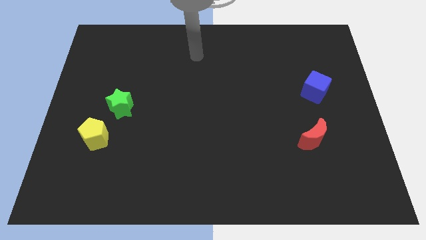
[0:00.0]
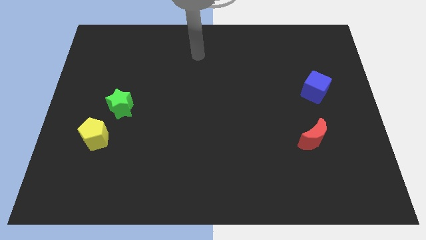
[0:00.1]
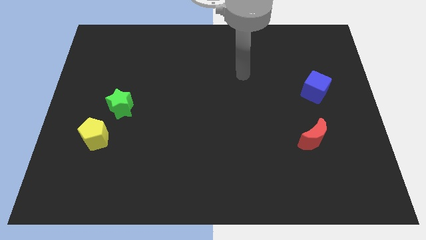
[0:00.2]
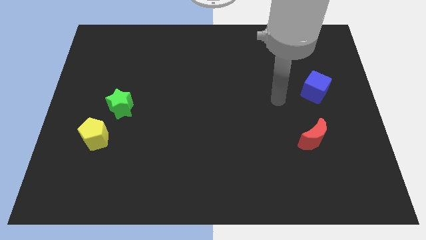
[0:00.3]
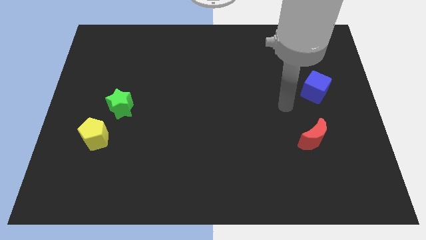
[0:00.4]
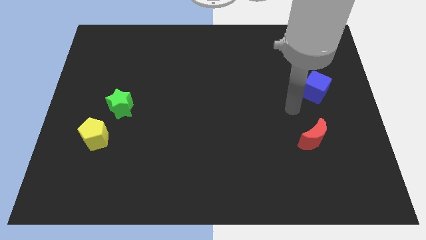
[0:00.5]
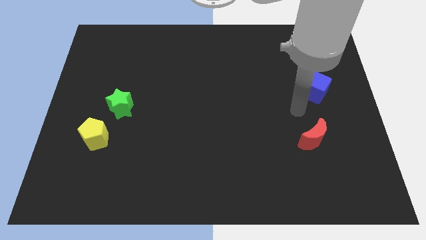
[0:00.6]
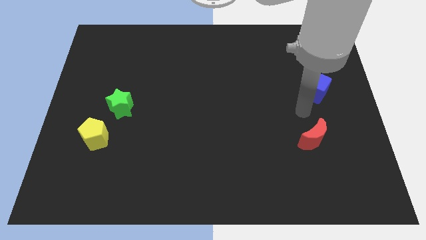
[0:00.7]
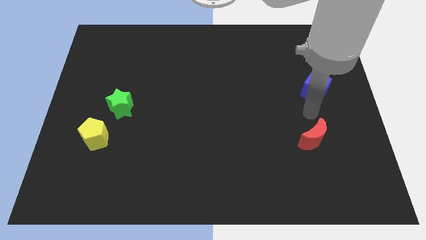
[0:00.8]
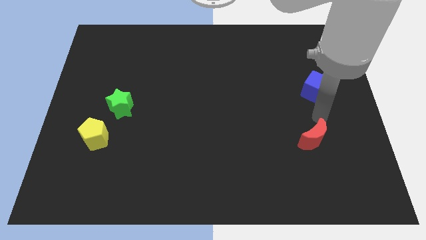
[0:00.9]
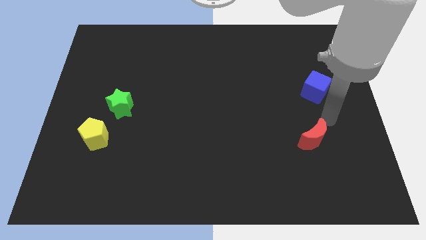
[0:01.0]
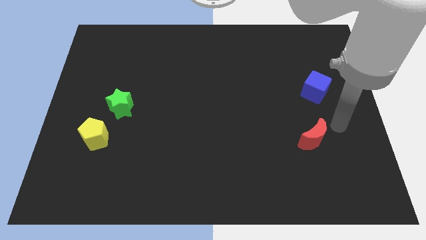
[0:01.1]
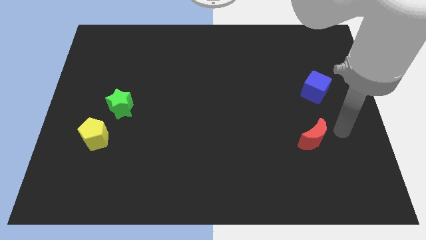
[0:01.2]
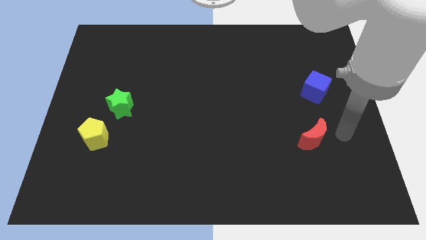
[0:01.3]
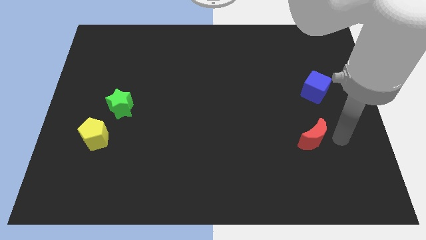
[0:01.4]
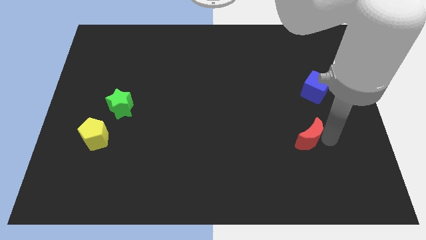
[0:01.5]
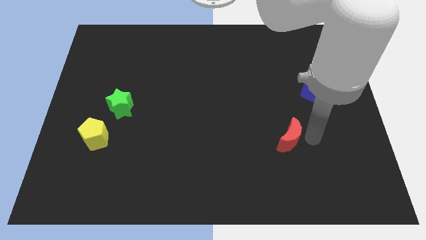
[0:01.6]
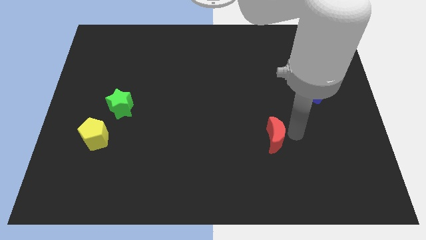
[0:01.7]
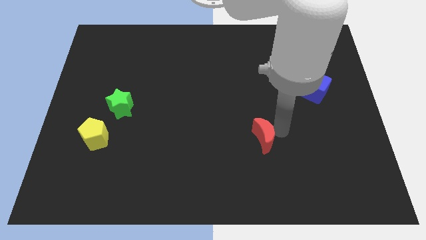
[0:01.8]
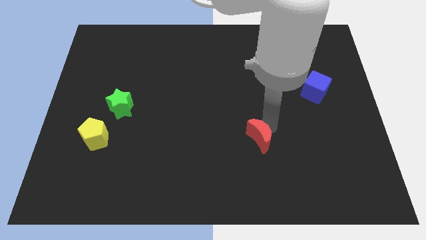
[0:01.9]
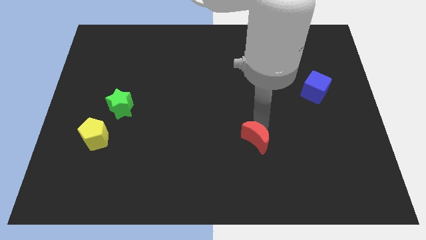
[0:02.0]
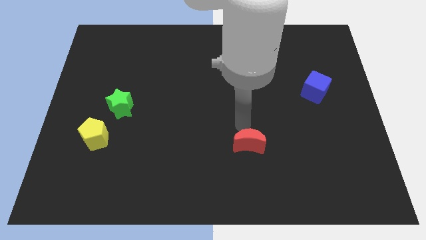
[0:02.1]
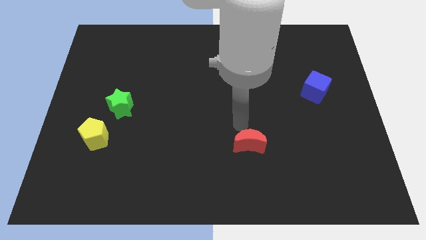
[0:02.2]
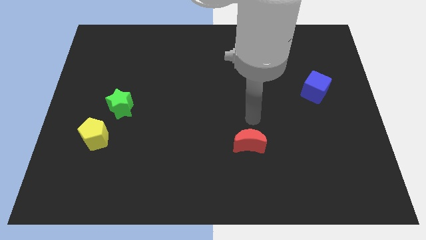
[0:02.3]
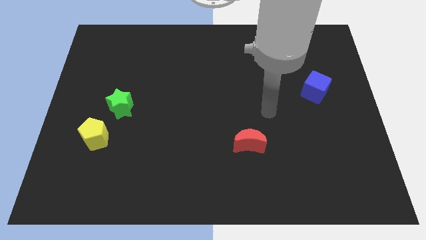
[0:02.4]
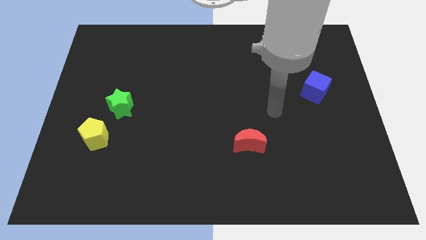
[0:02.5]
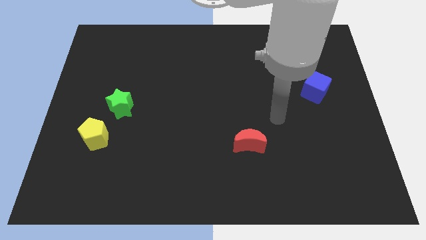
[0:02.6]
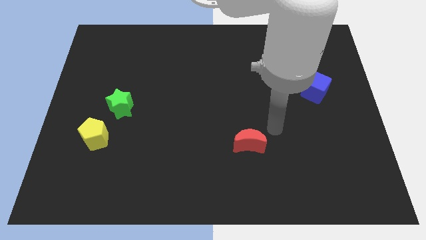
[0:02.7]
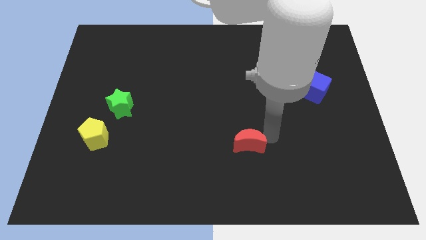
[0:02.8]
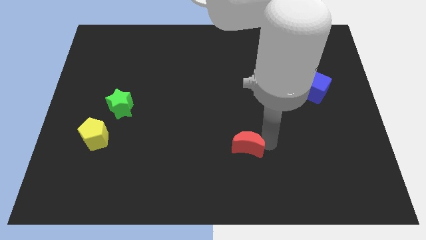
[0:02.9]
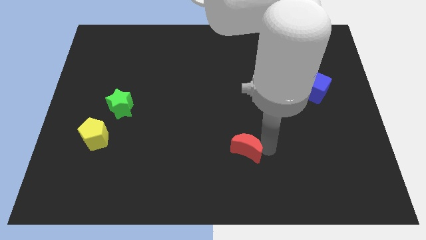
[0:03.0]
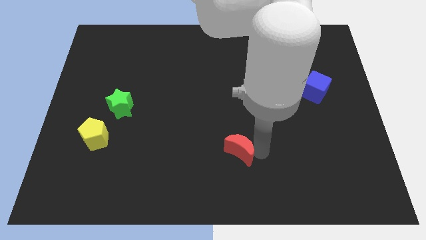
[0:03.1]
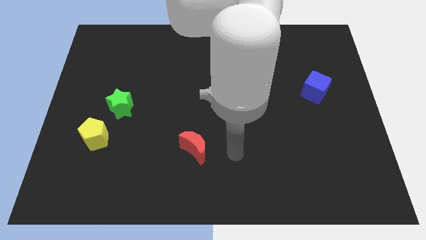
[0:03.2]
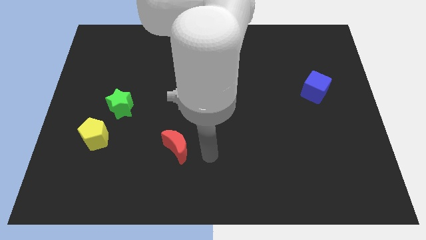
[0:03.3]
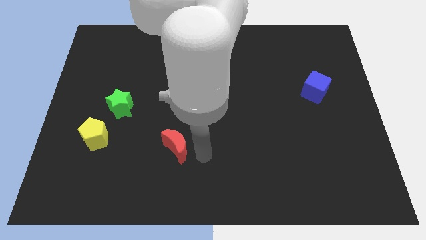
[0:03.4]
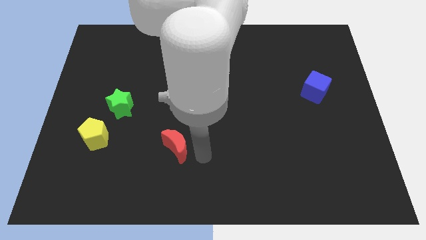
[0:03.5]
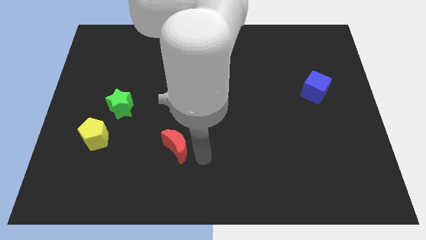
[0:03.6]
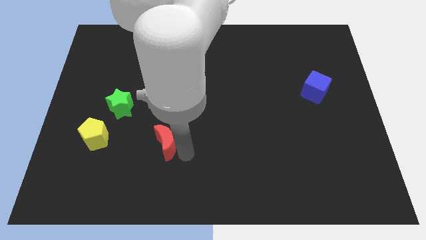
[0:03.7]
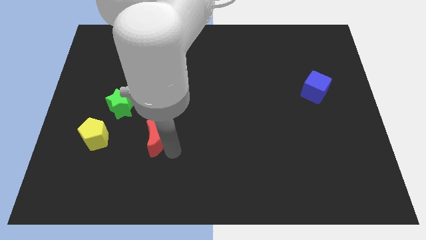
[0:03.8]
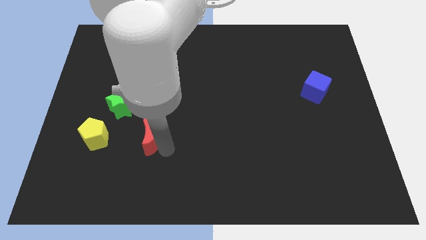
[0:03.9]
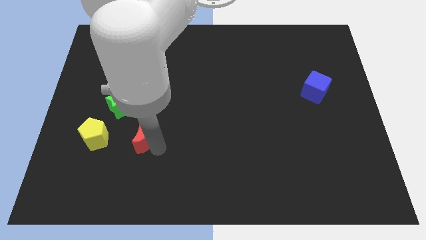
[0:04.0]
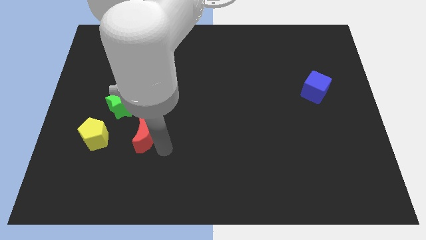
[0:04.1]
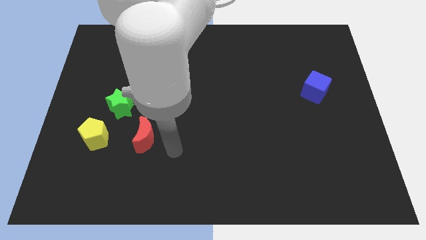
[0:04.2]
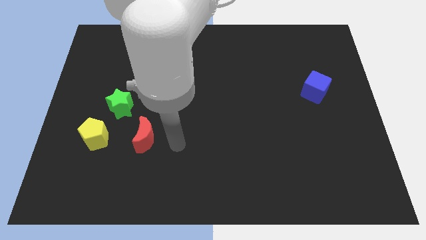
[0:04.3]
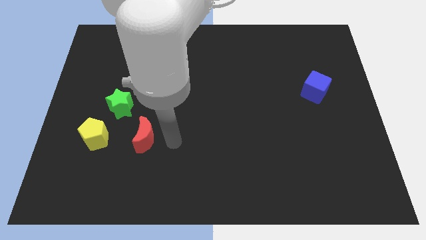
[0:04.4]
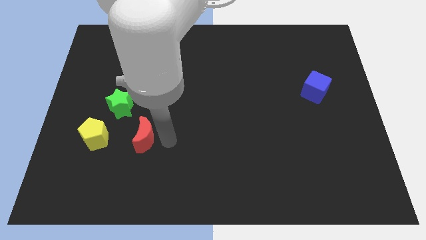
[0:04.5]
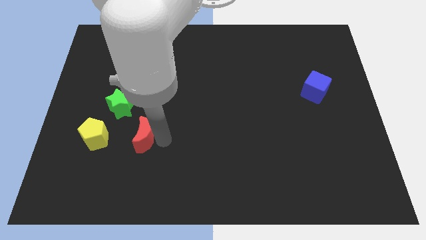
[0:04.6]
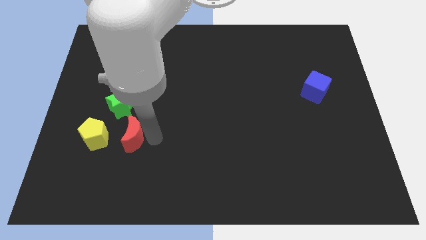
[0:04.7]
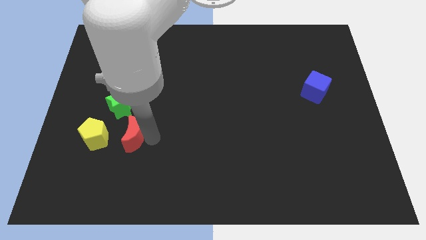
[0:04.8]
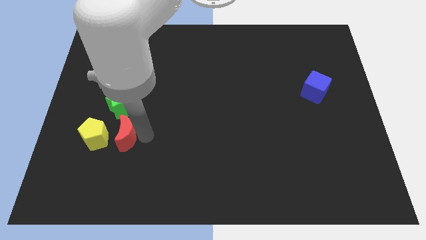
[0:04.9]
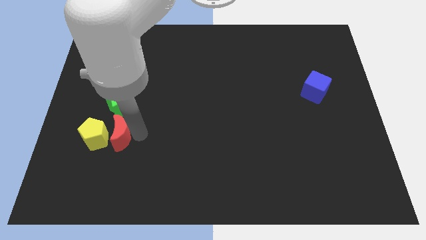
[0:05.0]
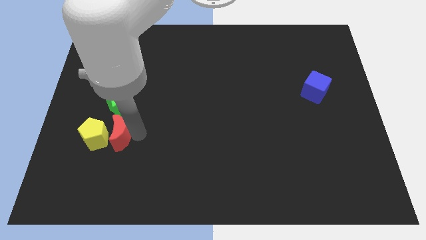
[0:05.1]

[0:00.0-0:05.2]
move the moon to the yellow pentagon

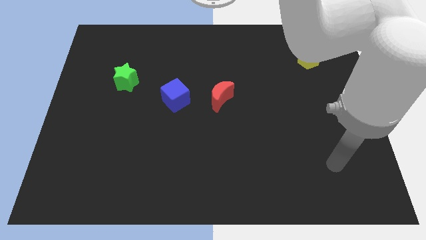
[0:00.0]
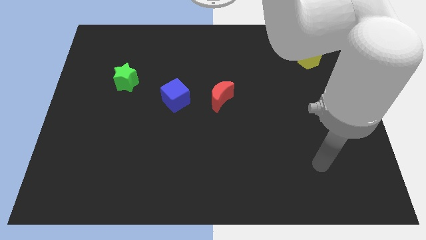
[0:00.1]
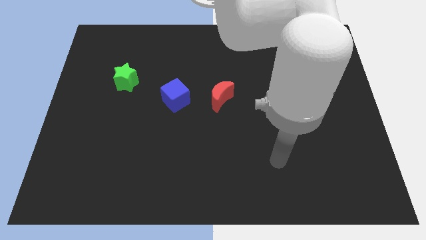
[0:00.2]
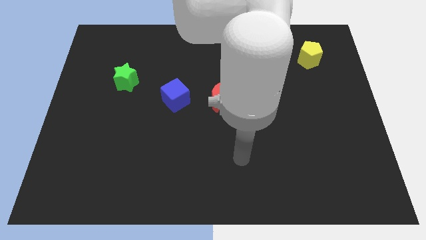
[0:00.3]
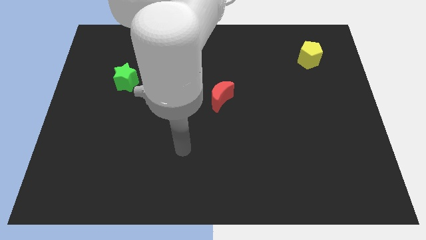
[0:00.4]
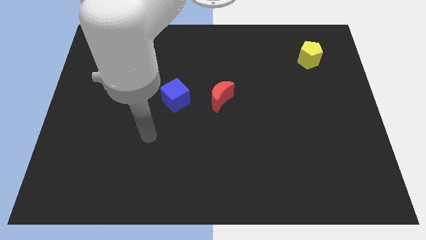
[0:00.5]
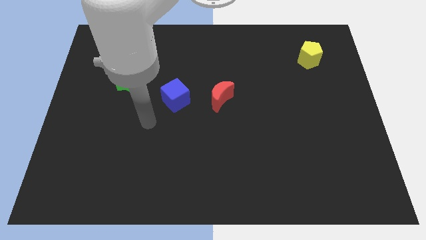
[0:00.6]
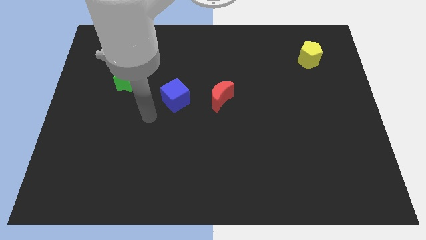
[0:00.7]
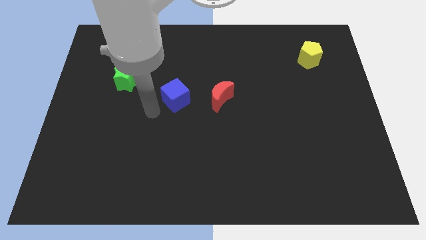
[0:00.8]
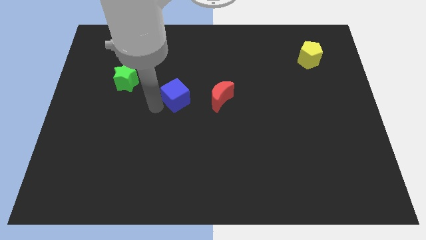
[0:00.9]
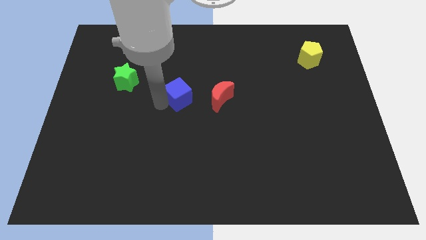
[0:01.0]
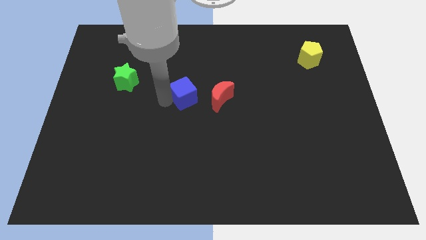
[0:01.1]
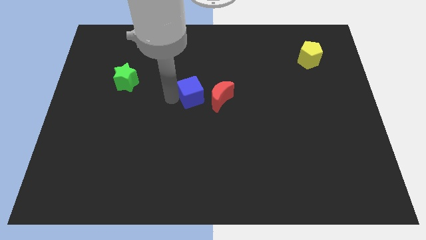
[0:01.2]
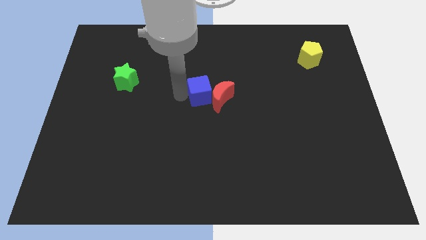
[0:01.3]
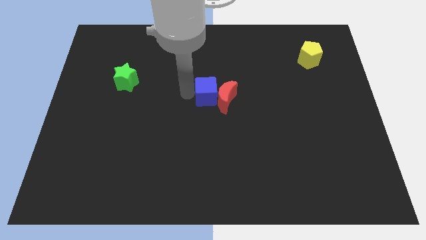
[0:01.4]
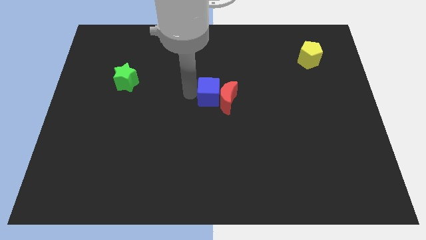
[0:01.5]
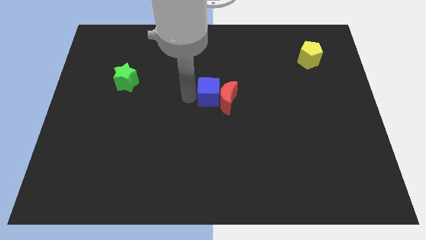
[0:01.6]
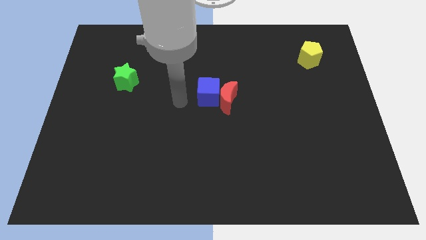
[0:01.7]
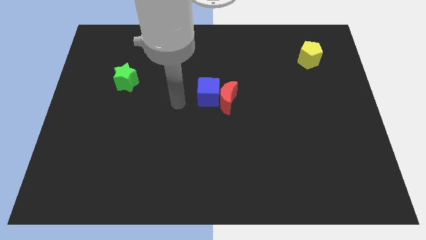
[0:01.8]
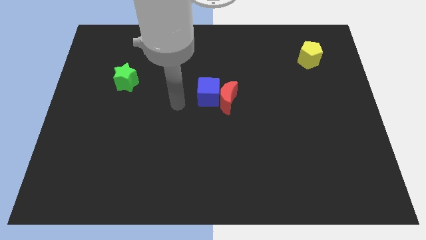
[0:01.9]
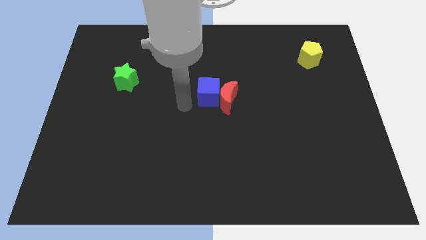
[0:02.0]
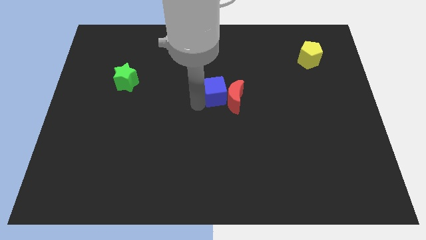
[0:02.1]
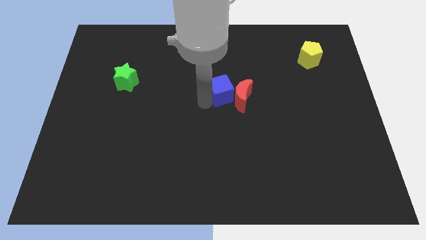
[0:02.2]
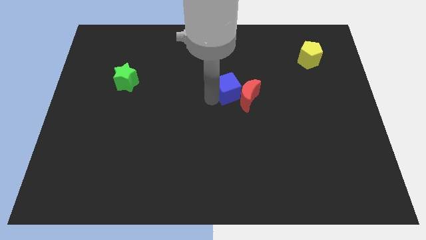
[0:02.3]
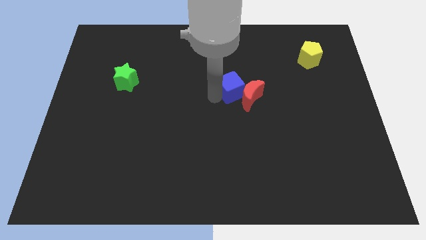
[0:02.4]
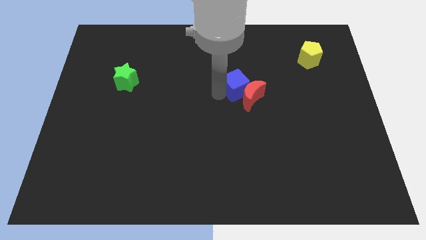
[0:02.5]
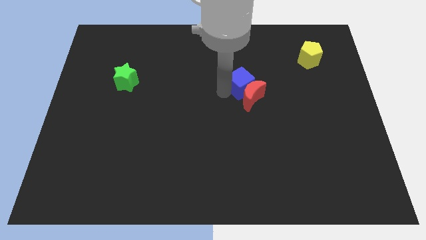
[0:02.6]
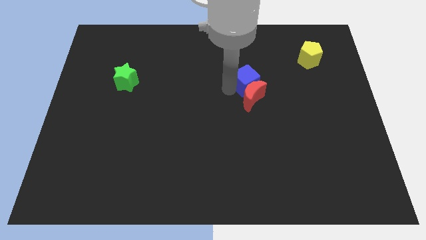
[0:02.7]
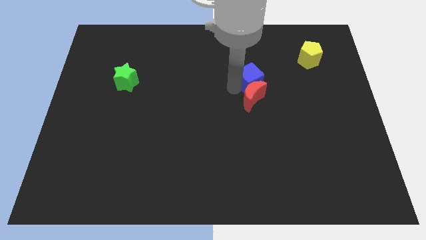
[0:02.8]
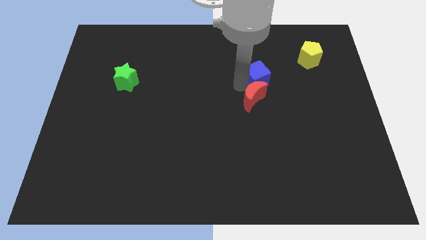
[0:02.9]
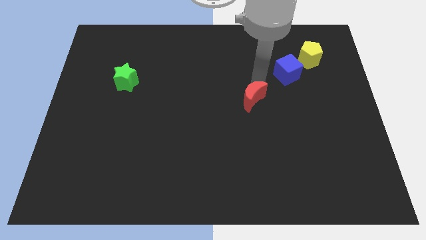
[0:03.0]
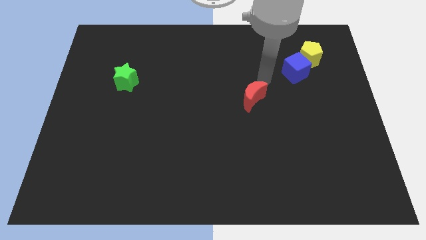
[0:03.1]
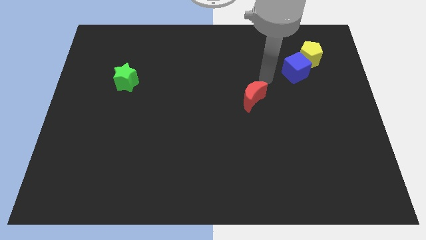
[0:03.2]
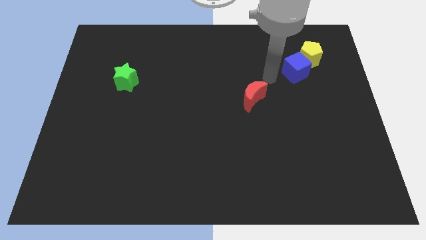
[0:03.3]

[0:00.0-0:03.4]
push the blue cube close to the yellow pentagon

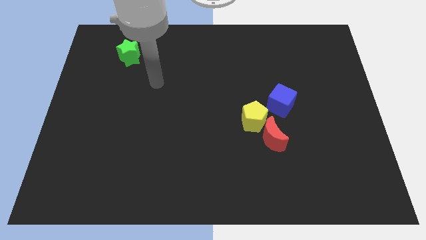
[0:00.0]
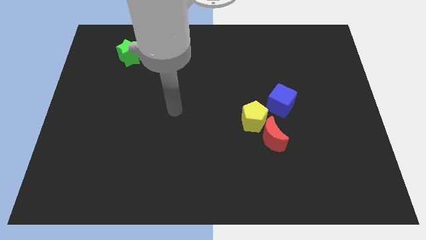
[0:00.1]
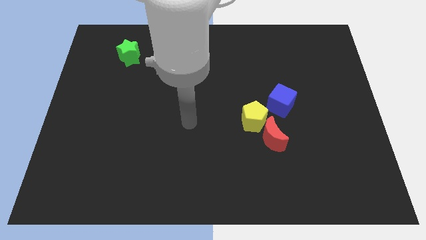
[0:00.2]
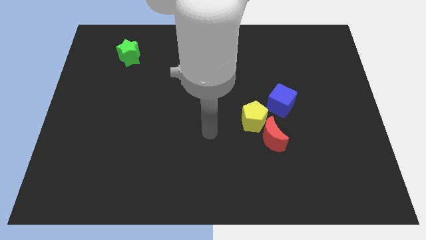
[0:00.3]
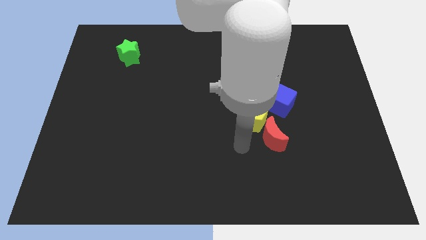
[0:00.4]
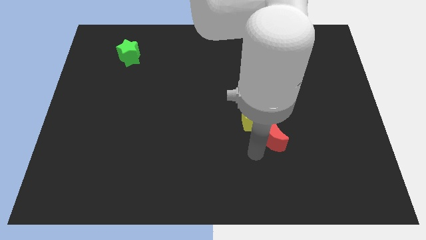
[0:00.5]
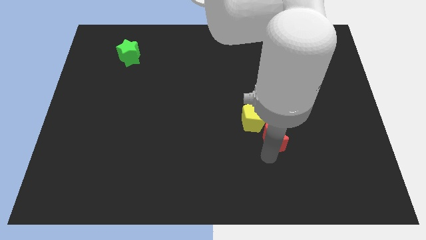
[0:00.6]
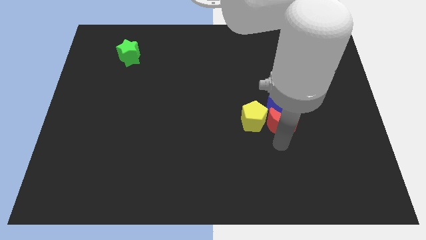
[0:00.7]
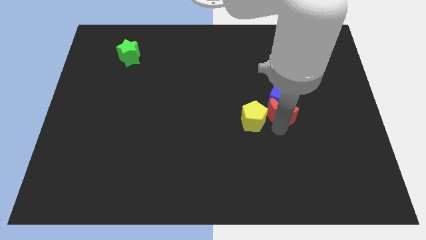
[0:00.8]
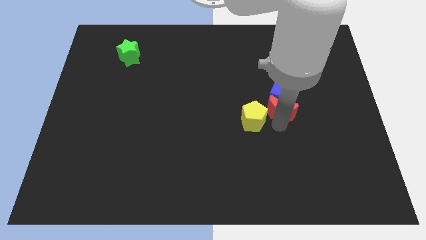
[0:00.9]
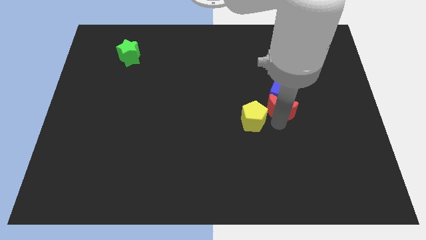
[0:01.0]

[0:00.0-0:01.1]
put the red block towards the cube
